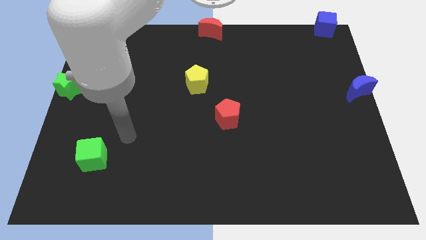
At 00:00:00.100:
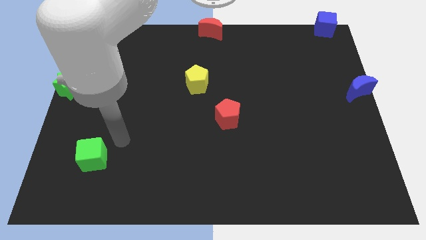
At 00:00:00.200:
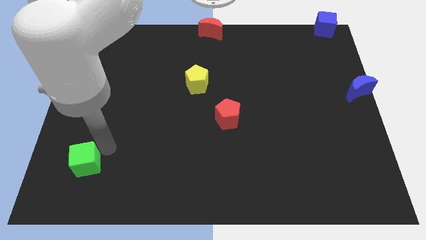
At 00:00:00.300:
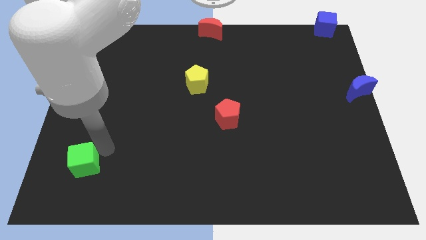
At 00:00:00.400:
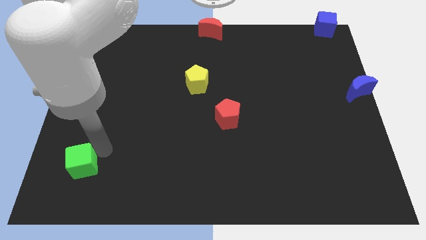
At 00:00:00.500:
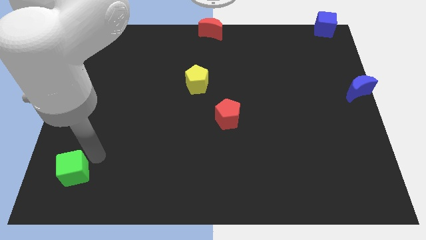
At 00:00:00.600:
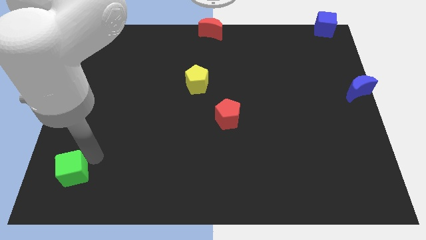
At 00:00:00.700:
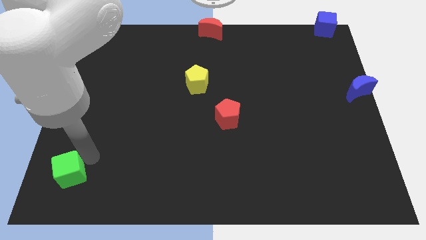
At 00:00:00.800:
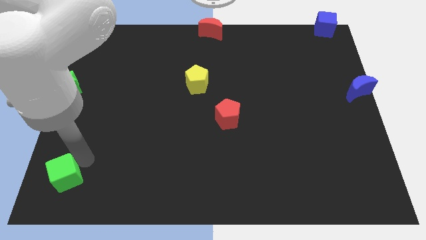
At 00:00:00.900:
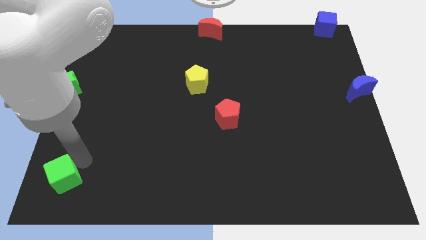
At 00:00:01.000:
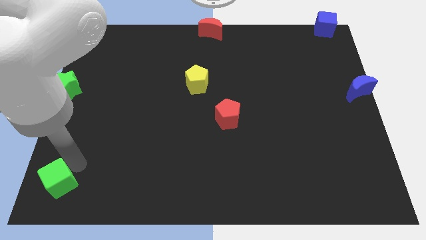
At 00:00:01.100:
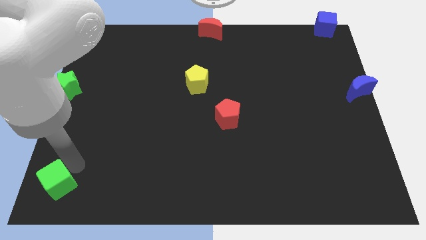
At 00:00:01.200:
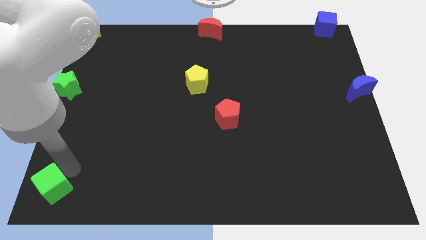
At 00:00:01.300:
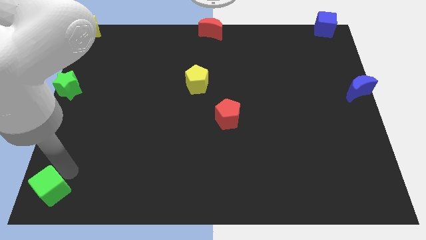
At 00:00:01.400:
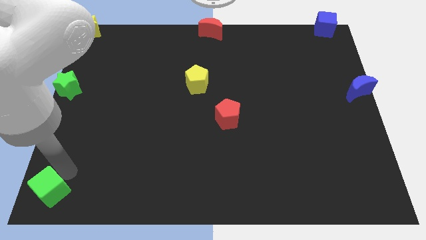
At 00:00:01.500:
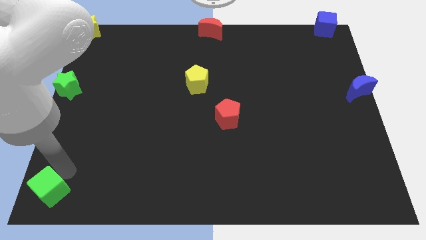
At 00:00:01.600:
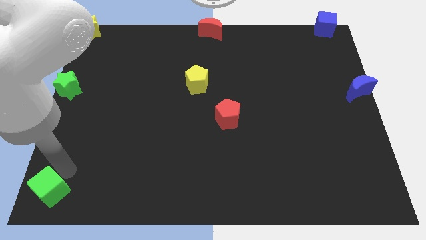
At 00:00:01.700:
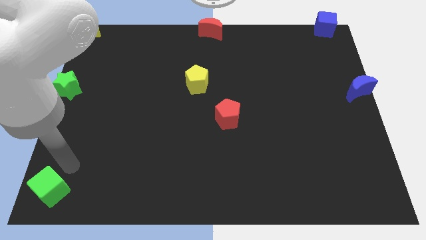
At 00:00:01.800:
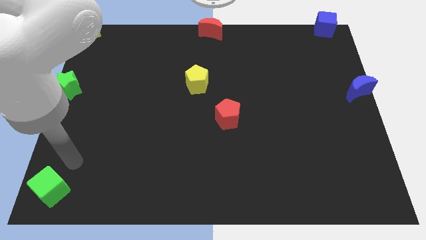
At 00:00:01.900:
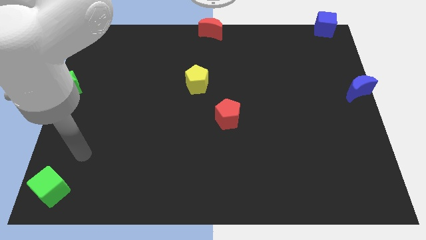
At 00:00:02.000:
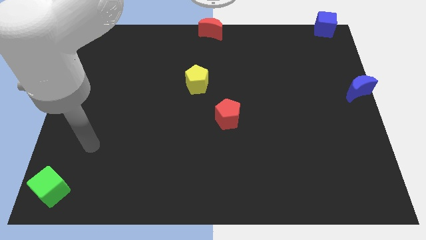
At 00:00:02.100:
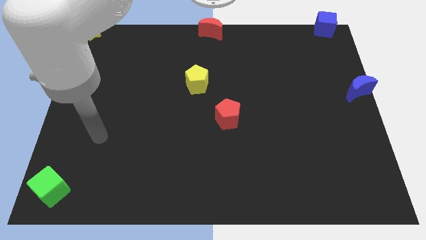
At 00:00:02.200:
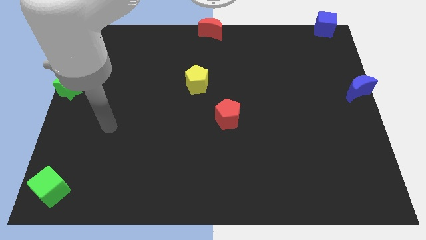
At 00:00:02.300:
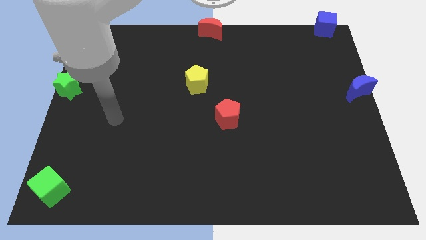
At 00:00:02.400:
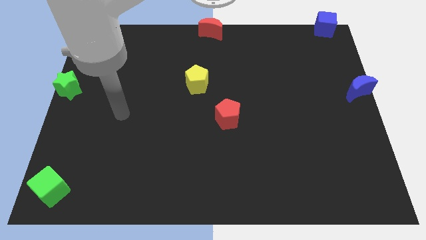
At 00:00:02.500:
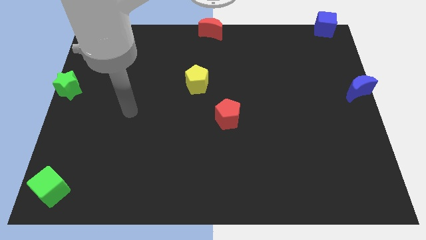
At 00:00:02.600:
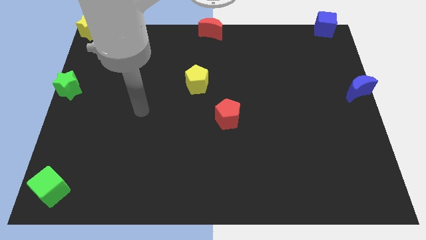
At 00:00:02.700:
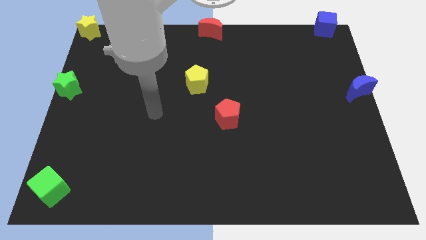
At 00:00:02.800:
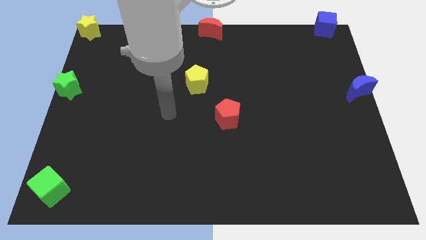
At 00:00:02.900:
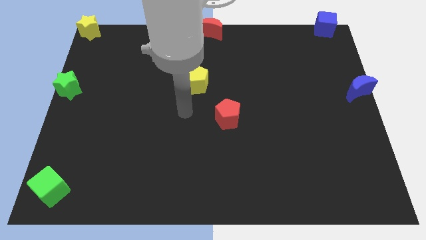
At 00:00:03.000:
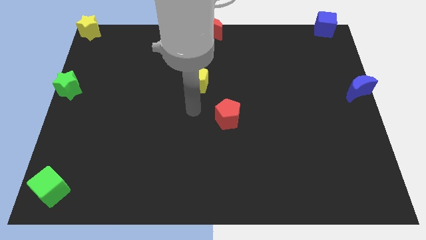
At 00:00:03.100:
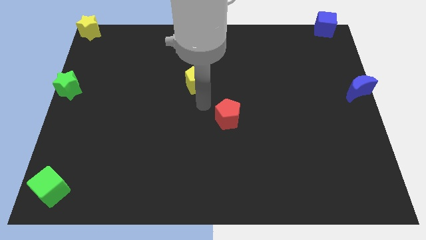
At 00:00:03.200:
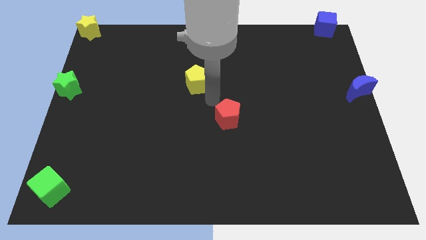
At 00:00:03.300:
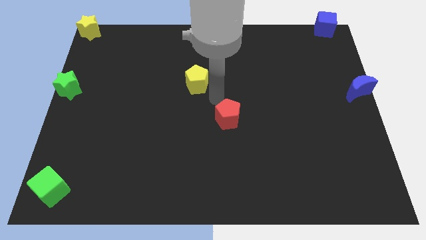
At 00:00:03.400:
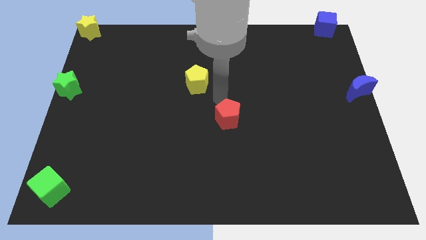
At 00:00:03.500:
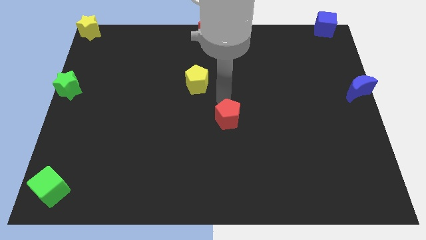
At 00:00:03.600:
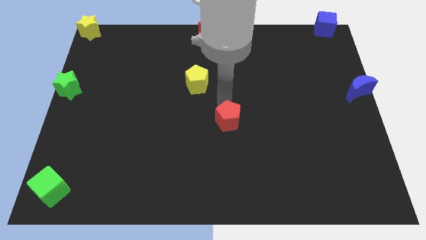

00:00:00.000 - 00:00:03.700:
place the green cube to the bottom left of the board

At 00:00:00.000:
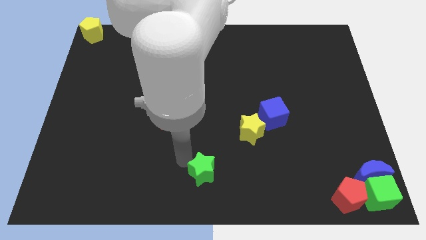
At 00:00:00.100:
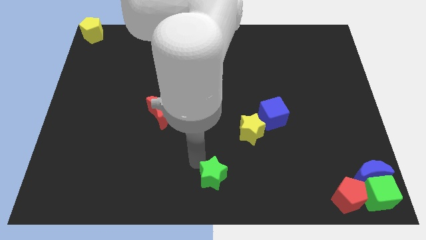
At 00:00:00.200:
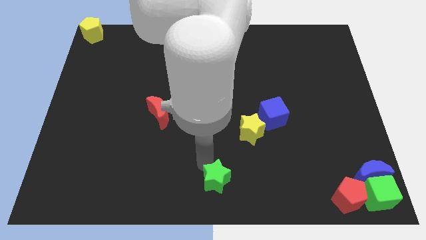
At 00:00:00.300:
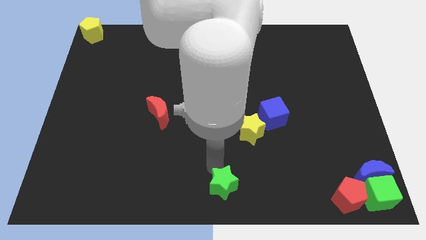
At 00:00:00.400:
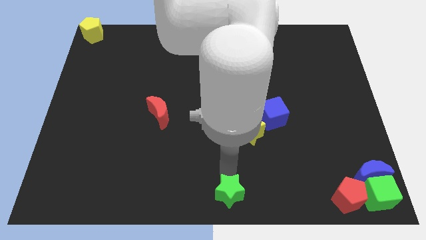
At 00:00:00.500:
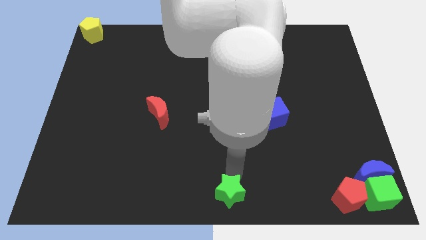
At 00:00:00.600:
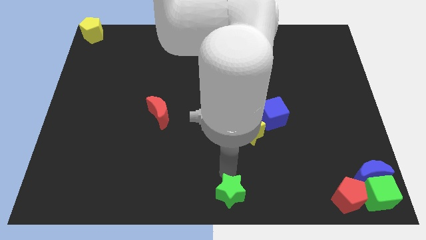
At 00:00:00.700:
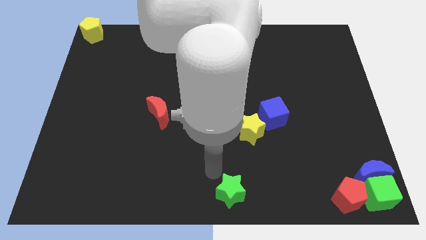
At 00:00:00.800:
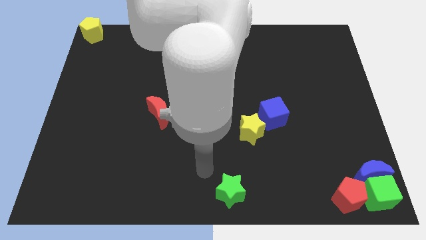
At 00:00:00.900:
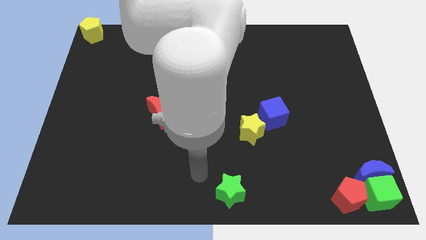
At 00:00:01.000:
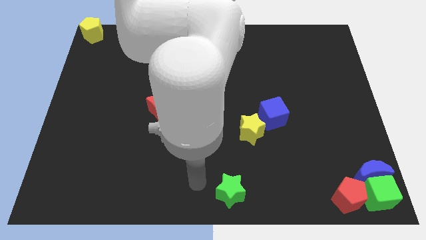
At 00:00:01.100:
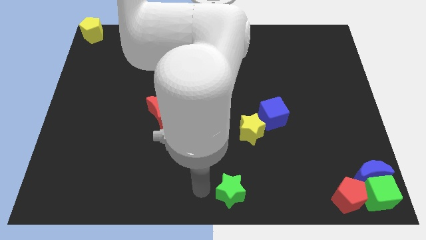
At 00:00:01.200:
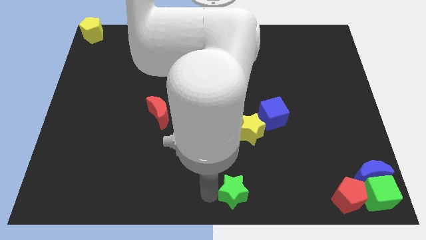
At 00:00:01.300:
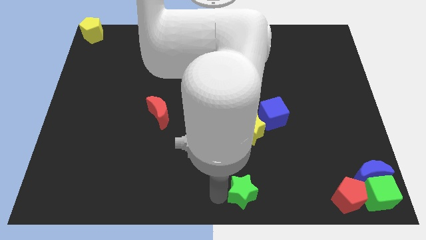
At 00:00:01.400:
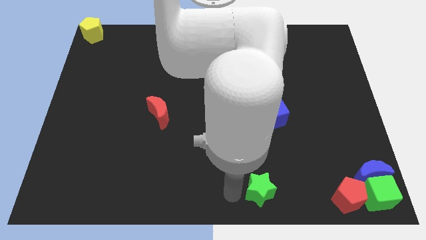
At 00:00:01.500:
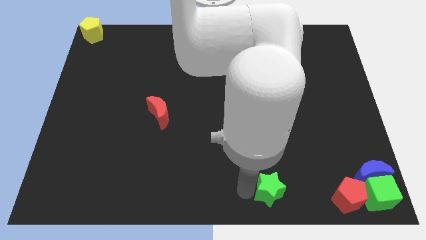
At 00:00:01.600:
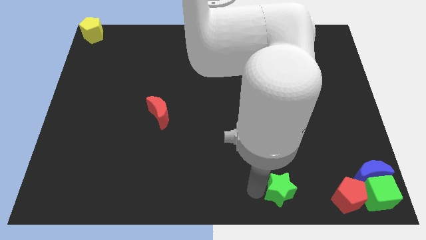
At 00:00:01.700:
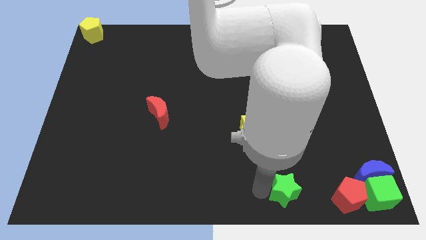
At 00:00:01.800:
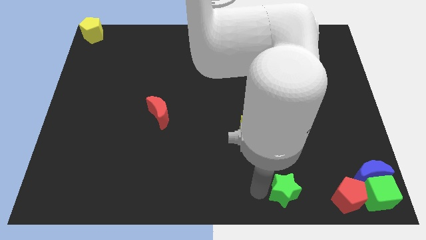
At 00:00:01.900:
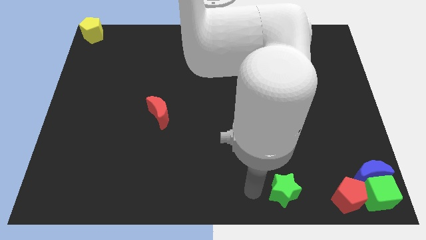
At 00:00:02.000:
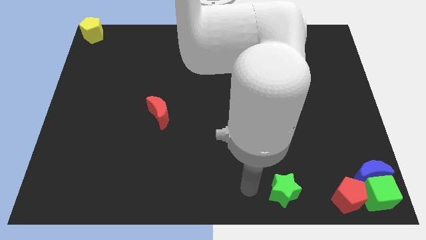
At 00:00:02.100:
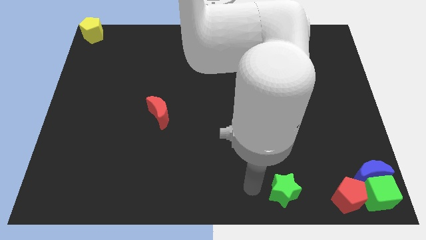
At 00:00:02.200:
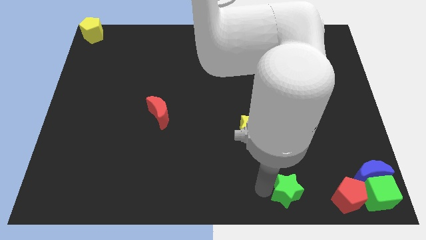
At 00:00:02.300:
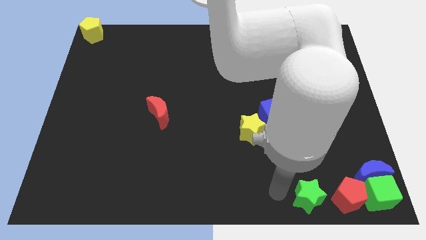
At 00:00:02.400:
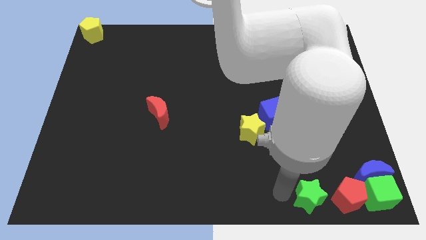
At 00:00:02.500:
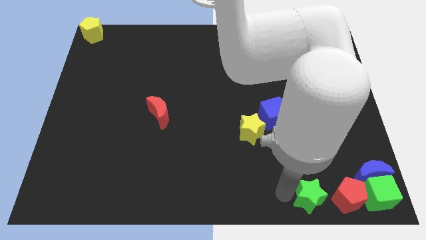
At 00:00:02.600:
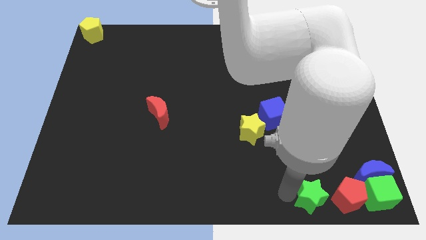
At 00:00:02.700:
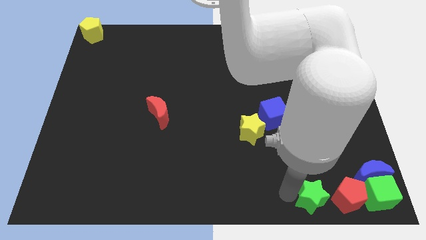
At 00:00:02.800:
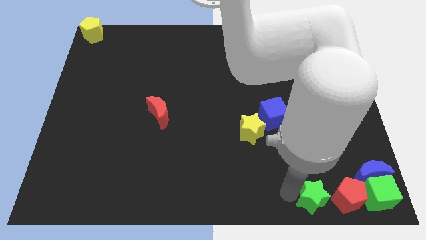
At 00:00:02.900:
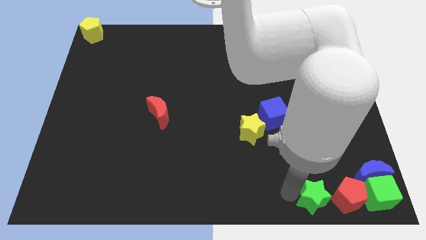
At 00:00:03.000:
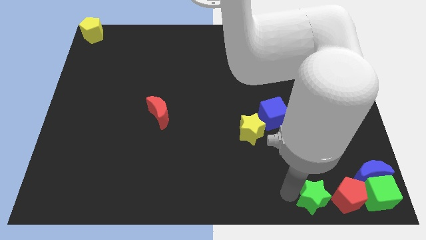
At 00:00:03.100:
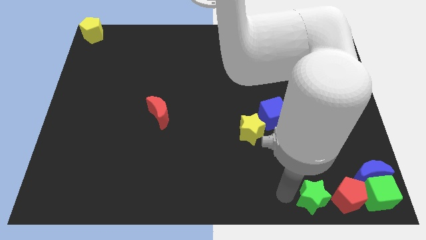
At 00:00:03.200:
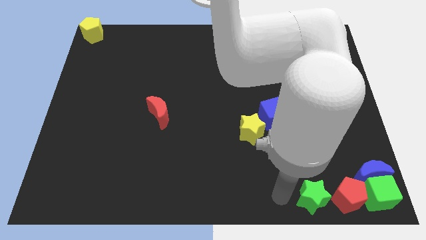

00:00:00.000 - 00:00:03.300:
move green star towards red pentagon

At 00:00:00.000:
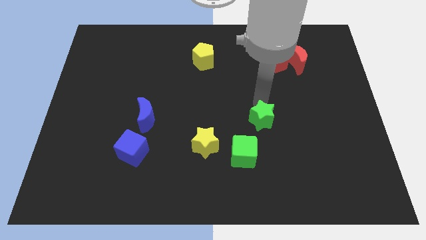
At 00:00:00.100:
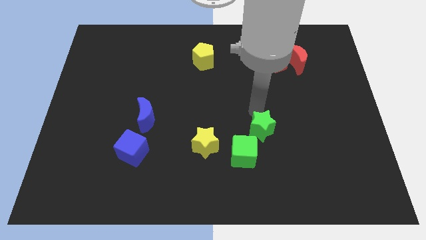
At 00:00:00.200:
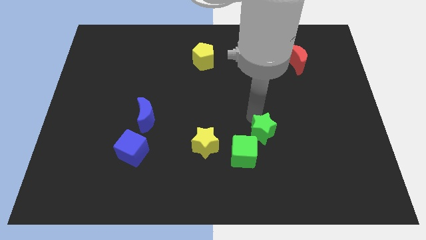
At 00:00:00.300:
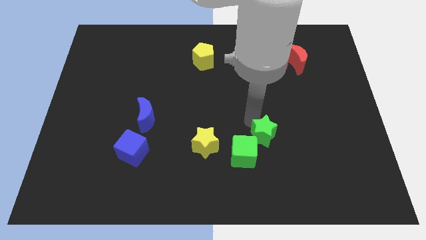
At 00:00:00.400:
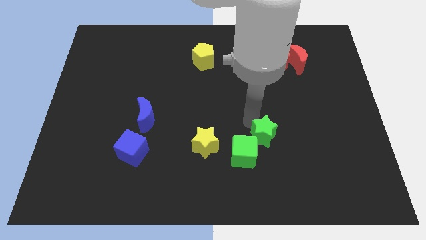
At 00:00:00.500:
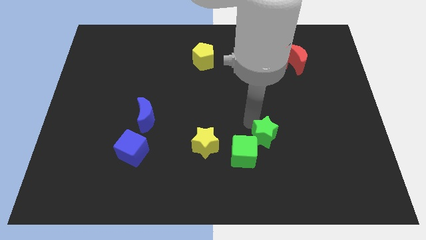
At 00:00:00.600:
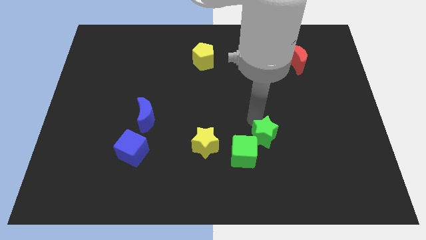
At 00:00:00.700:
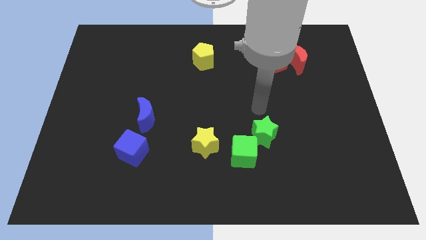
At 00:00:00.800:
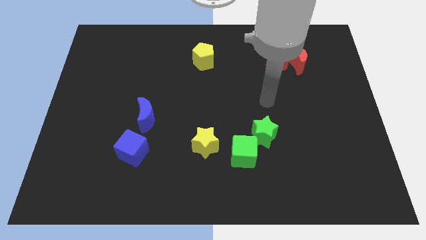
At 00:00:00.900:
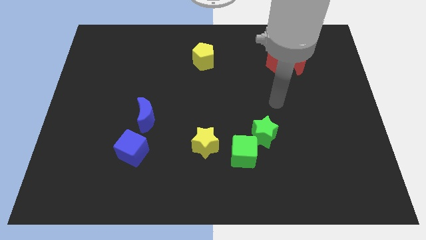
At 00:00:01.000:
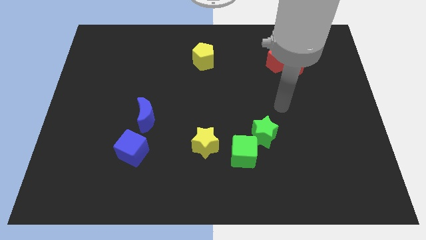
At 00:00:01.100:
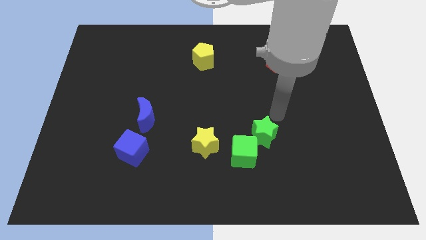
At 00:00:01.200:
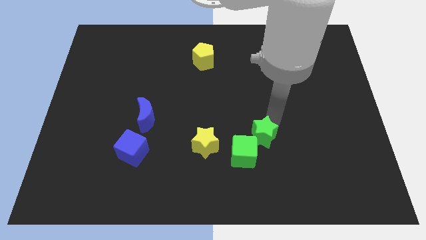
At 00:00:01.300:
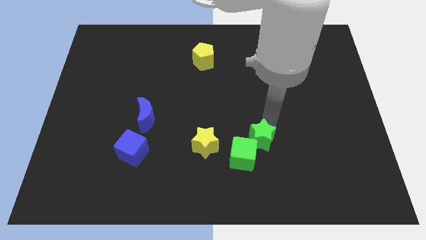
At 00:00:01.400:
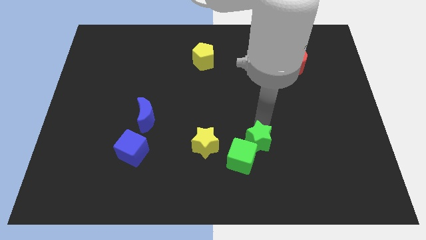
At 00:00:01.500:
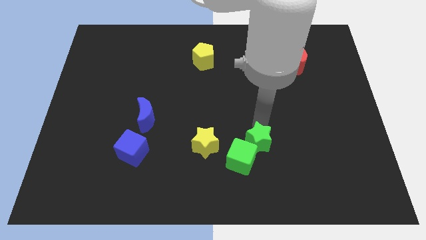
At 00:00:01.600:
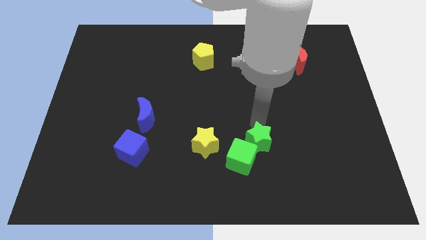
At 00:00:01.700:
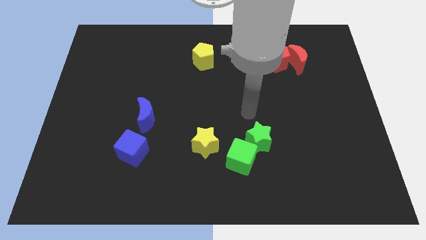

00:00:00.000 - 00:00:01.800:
move the green star into the green cube
